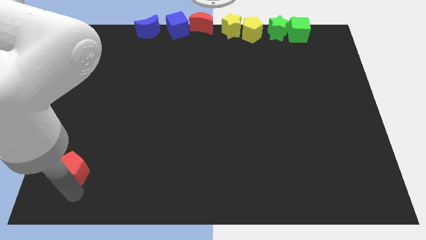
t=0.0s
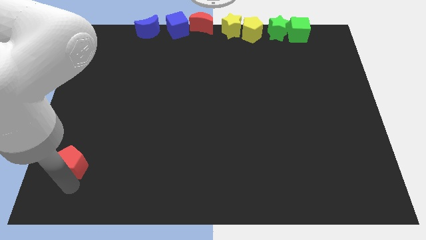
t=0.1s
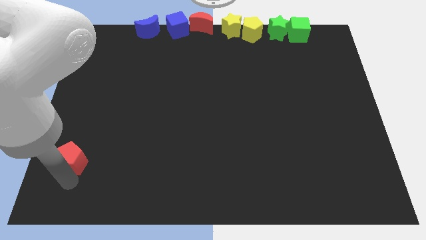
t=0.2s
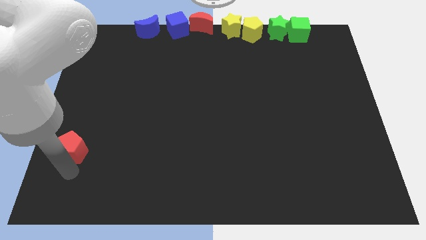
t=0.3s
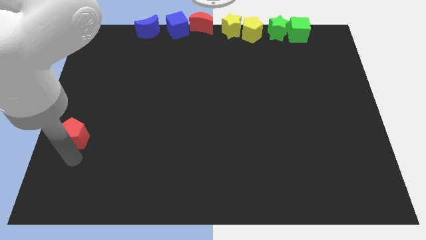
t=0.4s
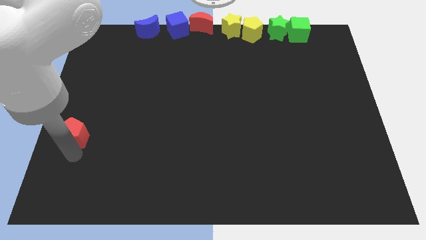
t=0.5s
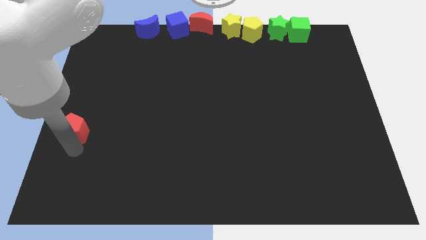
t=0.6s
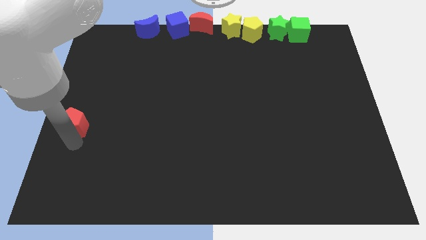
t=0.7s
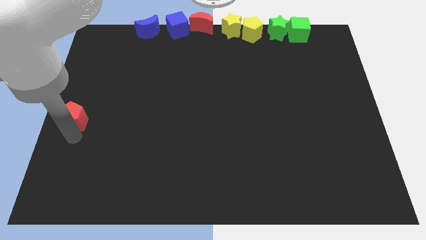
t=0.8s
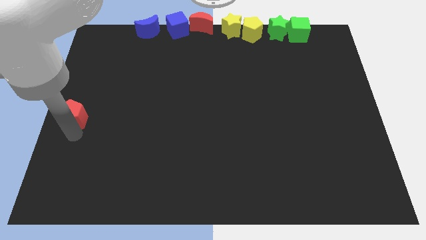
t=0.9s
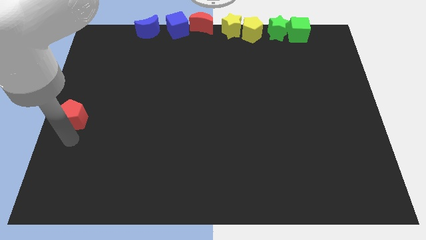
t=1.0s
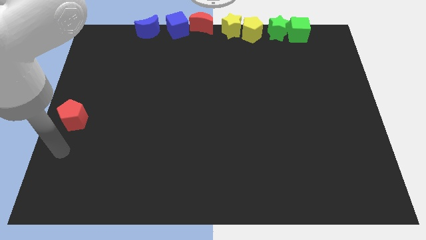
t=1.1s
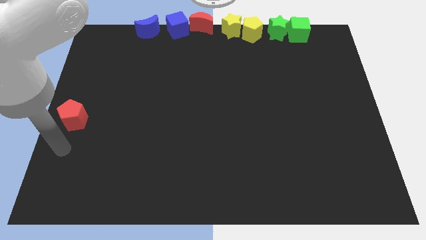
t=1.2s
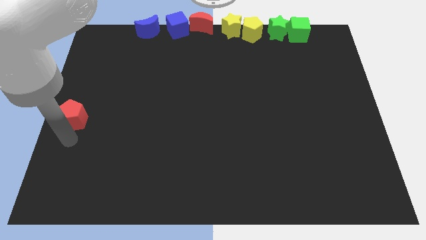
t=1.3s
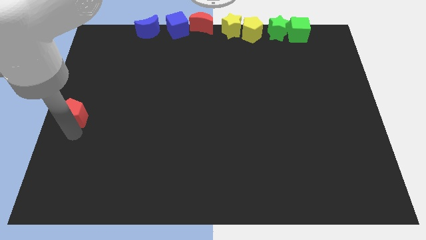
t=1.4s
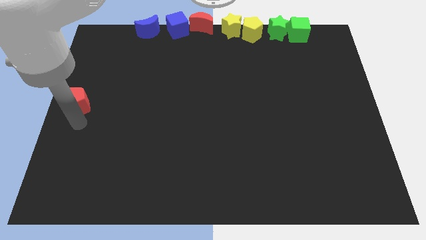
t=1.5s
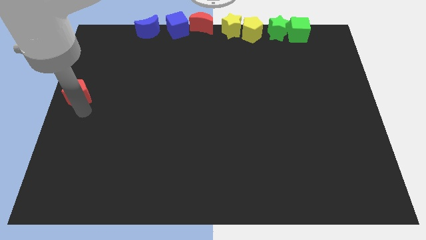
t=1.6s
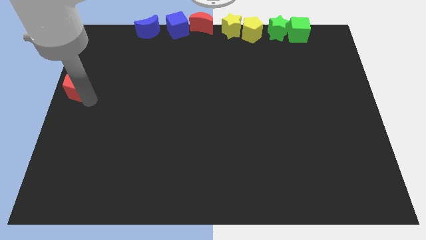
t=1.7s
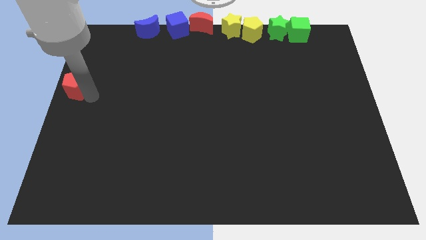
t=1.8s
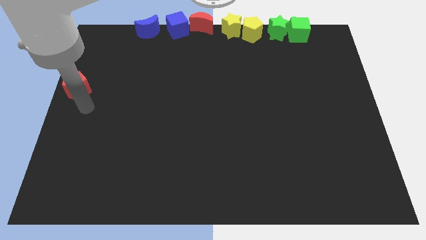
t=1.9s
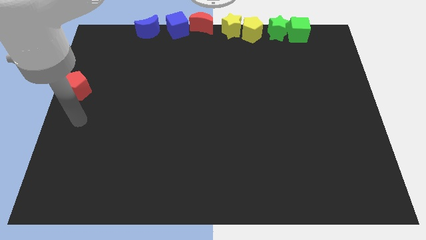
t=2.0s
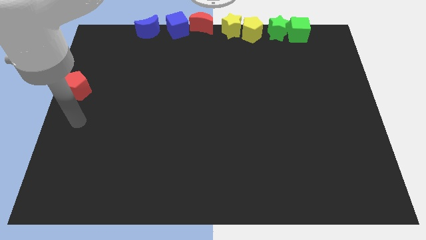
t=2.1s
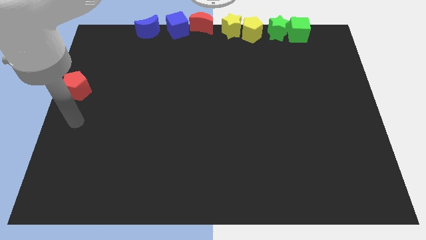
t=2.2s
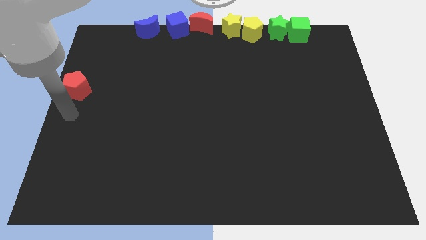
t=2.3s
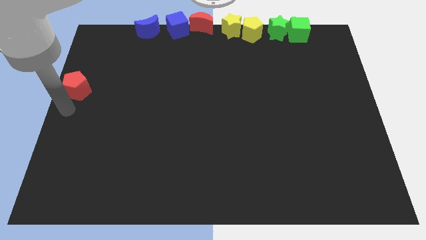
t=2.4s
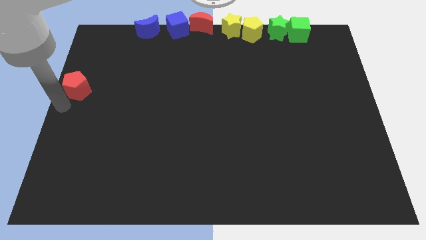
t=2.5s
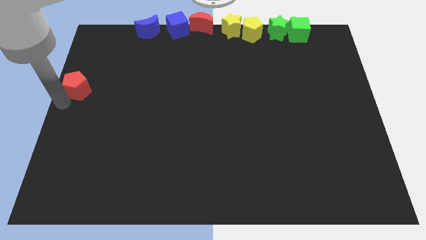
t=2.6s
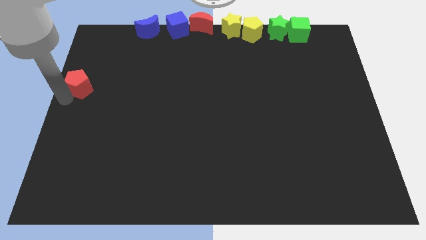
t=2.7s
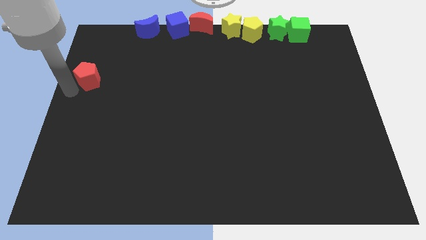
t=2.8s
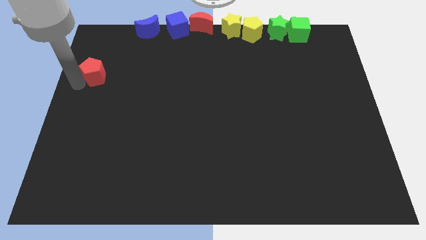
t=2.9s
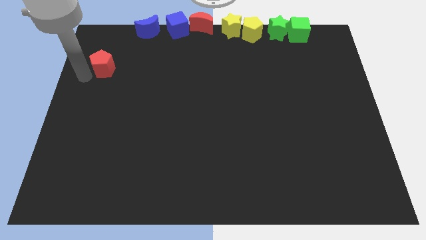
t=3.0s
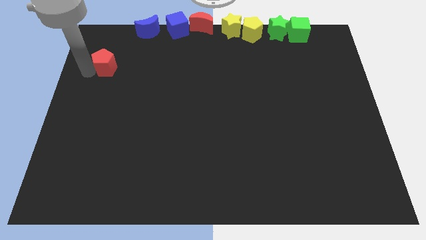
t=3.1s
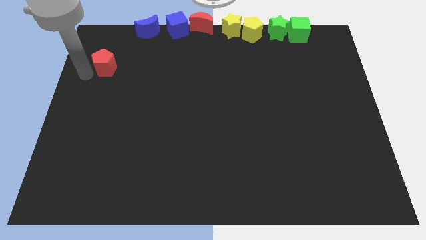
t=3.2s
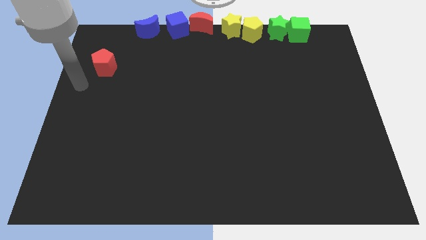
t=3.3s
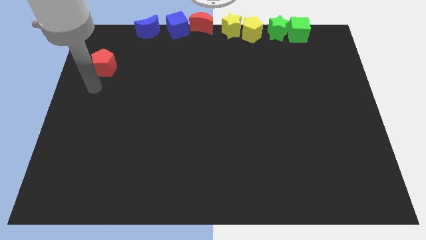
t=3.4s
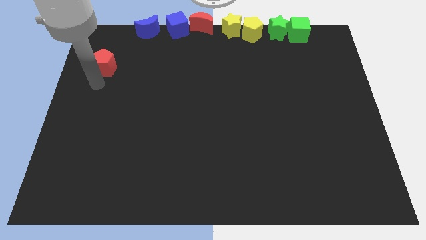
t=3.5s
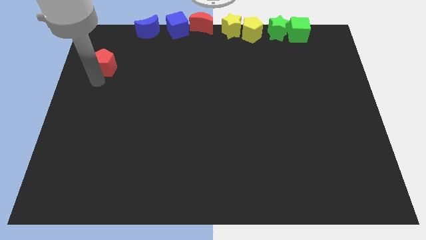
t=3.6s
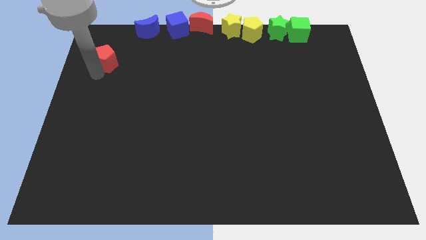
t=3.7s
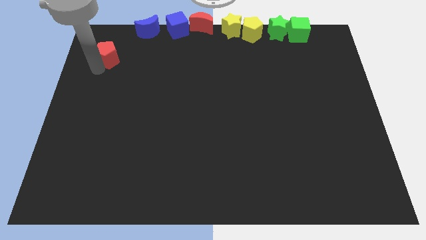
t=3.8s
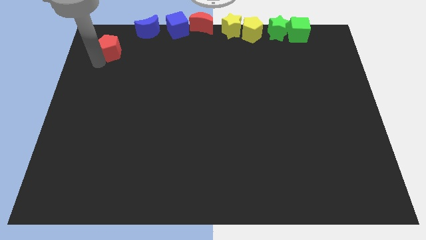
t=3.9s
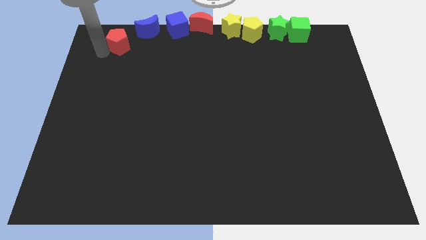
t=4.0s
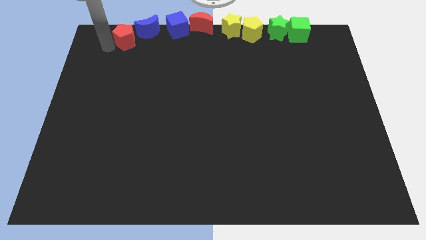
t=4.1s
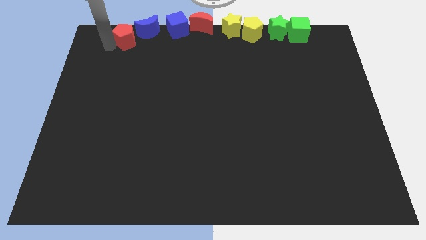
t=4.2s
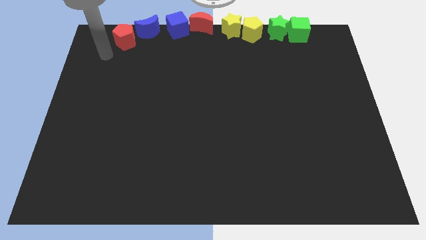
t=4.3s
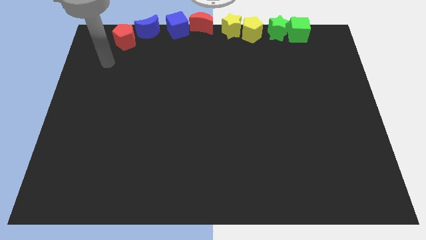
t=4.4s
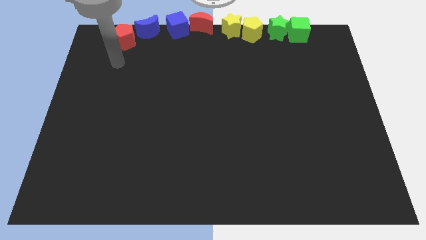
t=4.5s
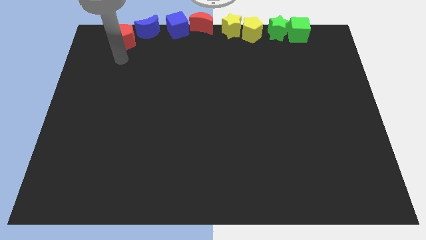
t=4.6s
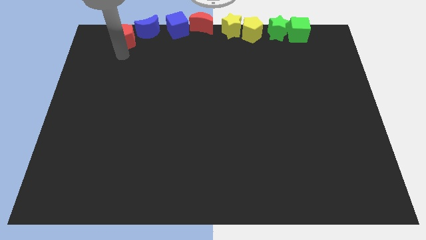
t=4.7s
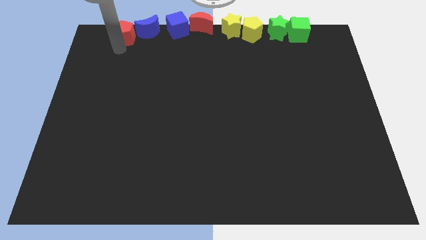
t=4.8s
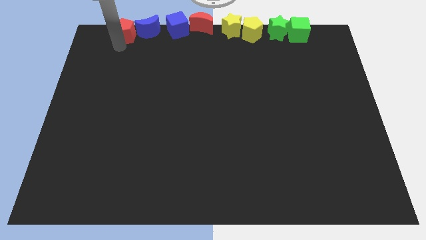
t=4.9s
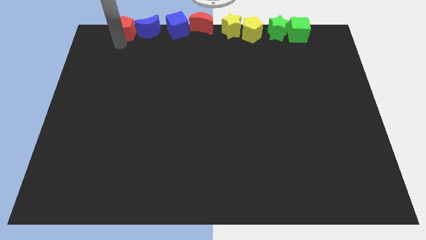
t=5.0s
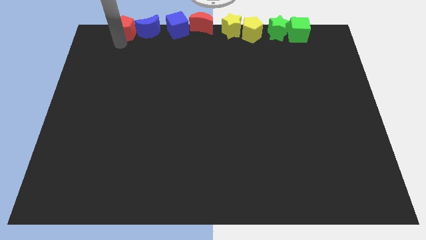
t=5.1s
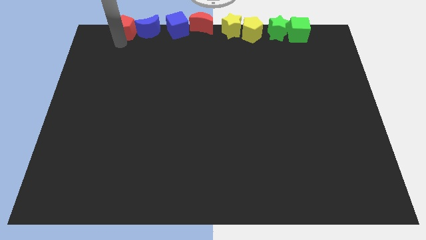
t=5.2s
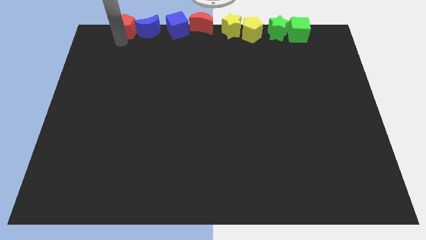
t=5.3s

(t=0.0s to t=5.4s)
push the red pentagon into the blue crescent

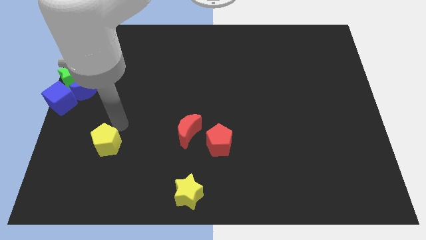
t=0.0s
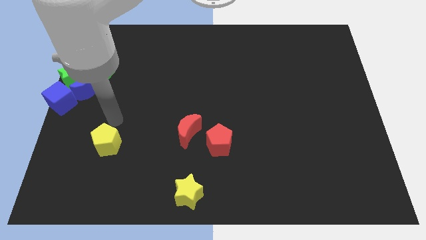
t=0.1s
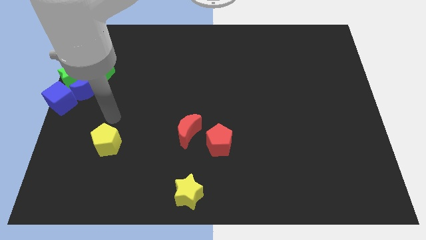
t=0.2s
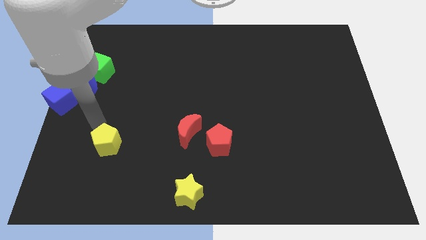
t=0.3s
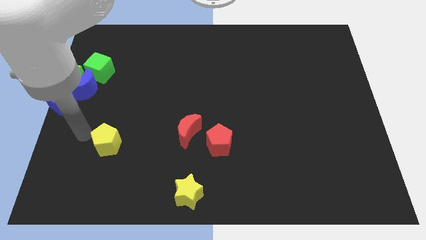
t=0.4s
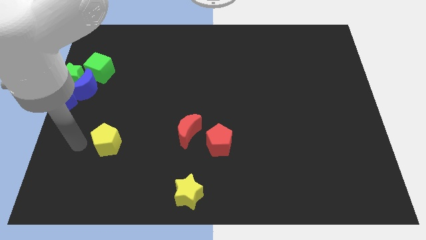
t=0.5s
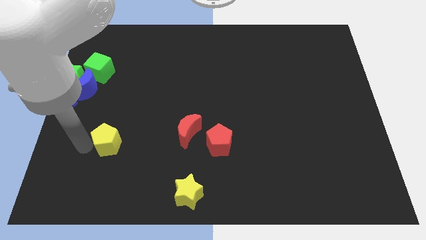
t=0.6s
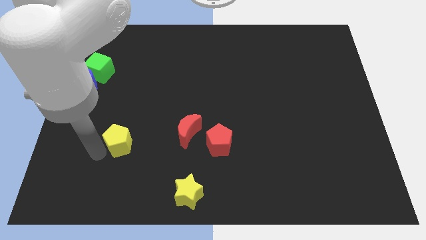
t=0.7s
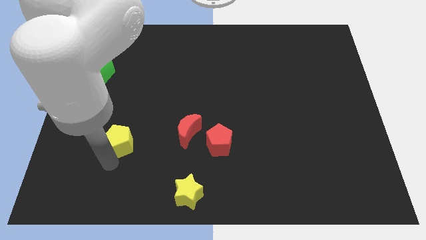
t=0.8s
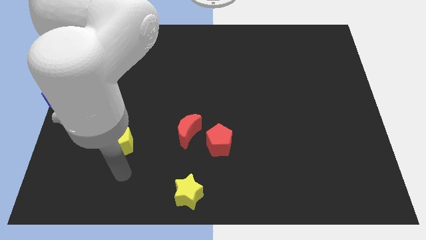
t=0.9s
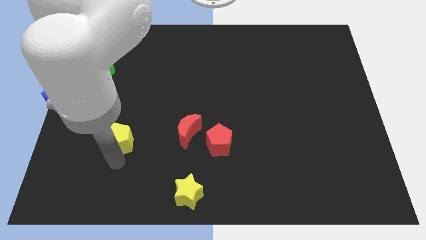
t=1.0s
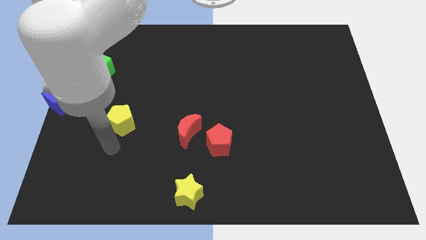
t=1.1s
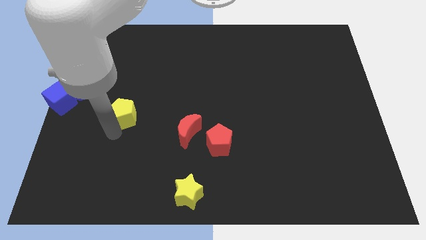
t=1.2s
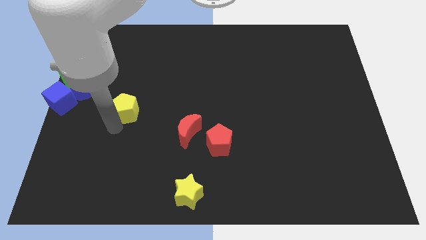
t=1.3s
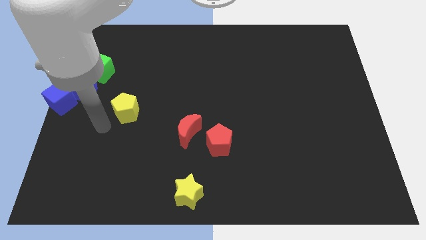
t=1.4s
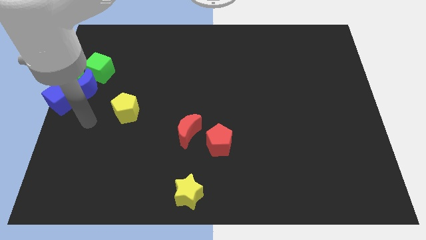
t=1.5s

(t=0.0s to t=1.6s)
place the yellow pentagon between the blue moon and red moon

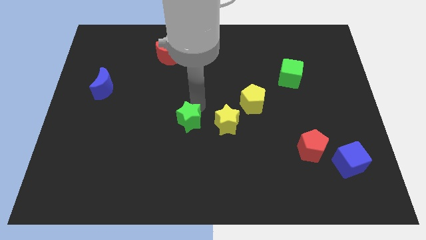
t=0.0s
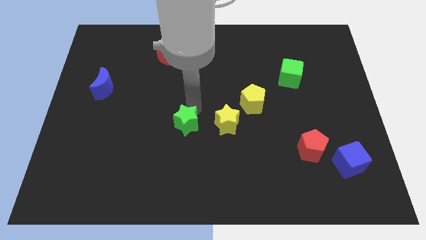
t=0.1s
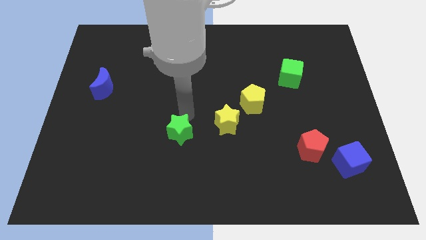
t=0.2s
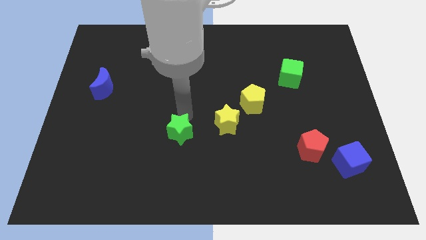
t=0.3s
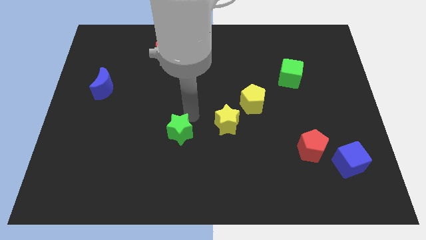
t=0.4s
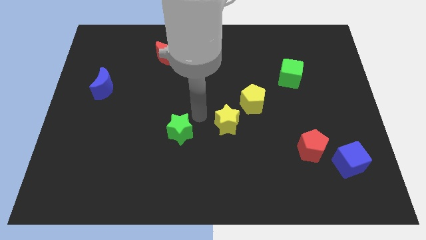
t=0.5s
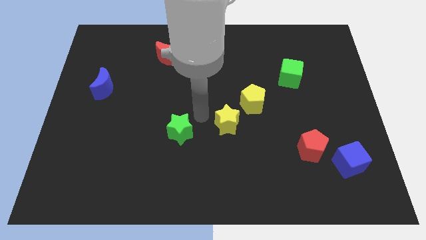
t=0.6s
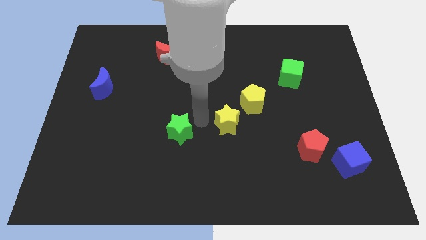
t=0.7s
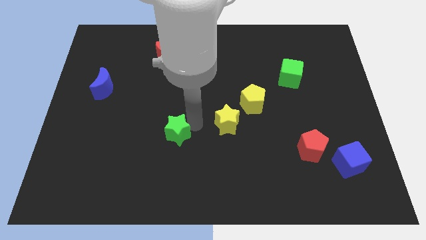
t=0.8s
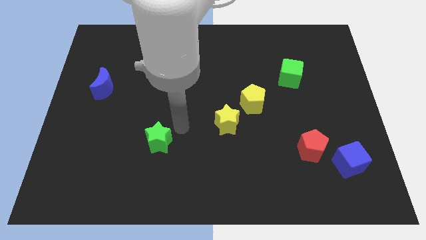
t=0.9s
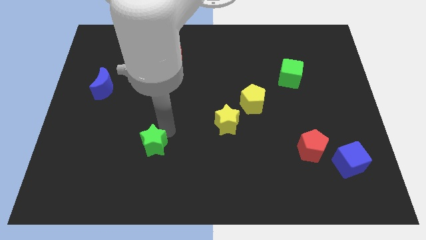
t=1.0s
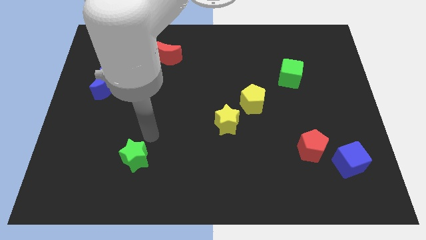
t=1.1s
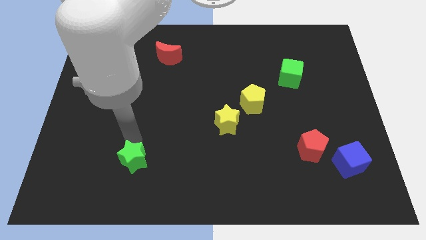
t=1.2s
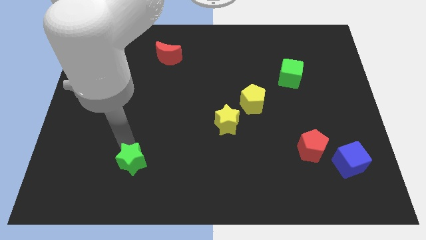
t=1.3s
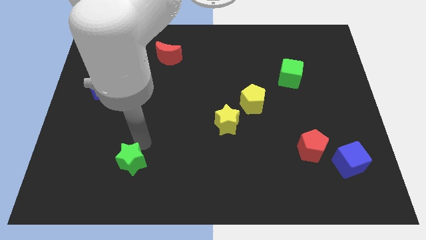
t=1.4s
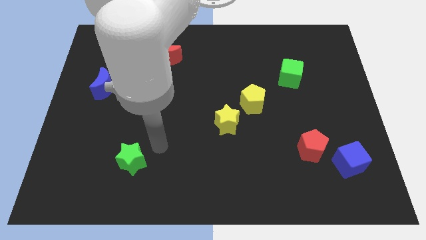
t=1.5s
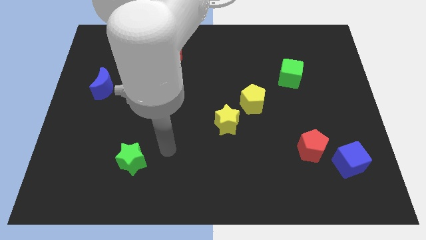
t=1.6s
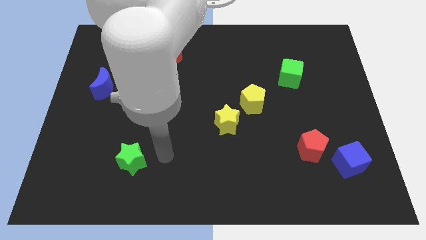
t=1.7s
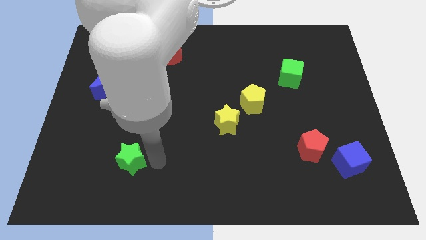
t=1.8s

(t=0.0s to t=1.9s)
slightly move the green star diagonally down

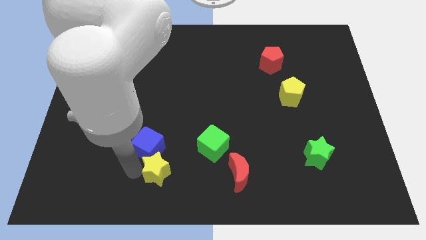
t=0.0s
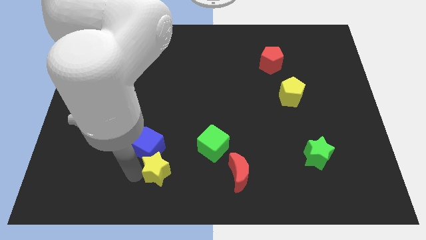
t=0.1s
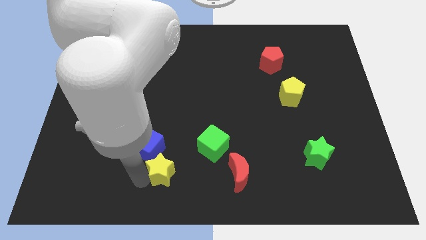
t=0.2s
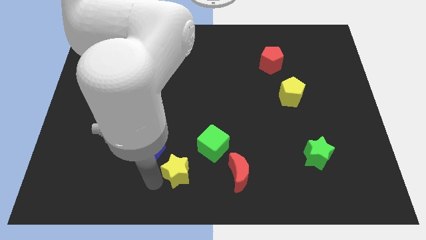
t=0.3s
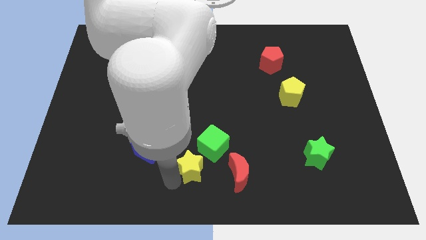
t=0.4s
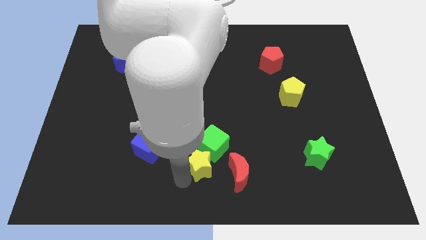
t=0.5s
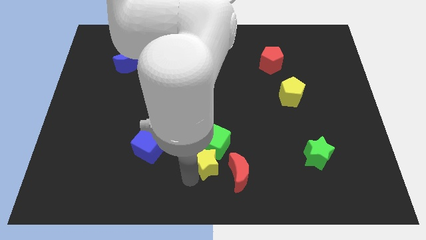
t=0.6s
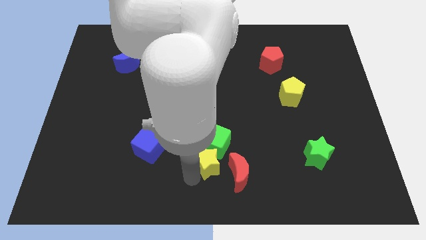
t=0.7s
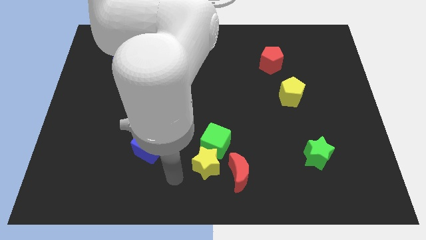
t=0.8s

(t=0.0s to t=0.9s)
drag a yellow star in to green cube
